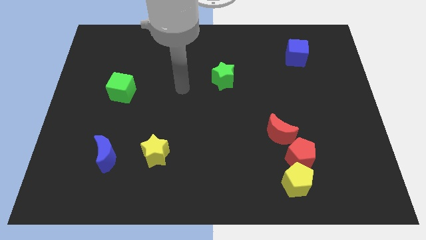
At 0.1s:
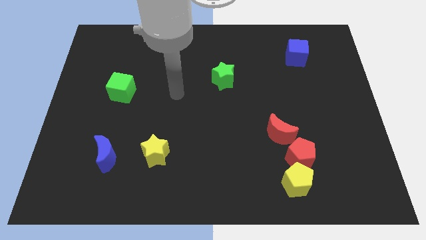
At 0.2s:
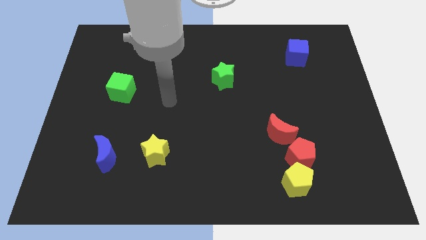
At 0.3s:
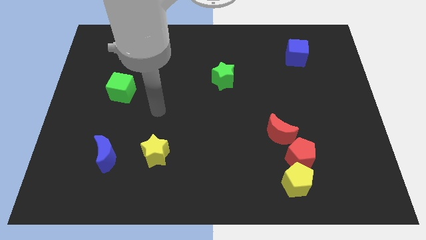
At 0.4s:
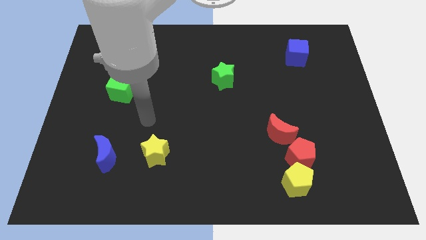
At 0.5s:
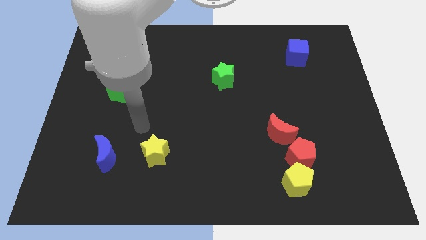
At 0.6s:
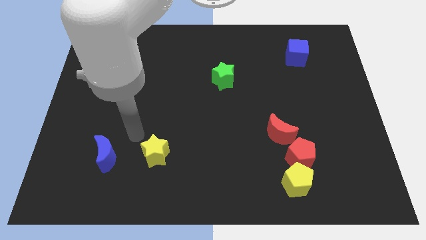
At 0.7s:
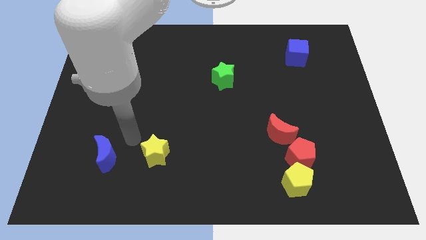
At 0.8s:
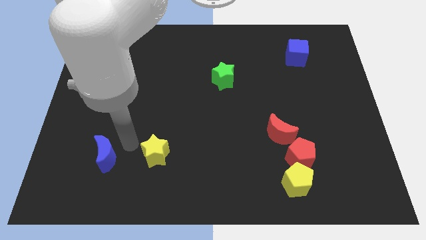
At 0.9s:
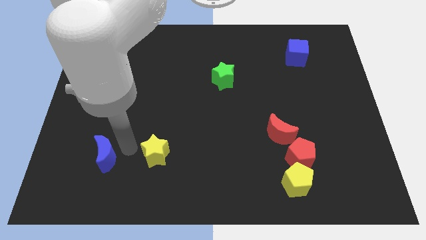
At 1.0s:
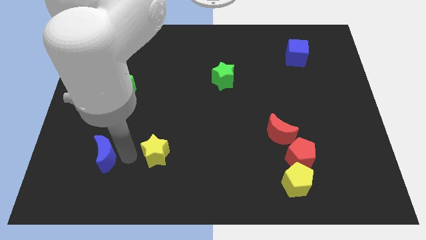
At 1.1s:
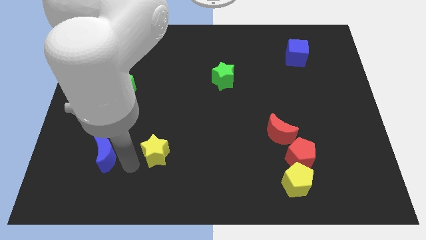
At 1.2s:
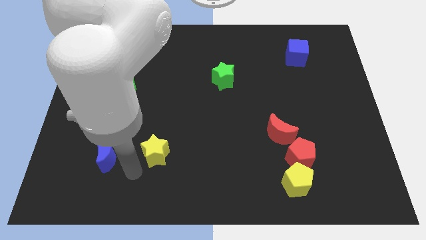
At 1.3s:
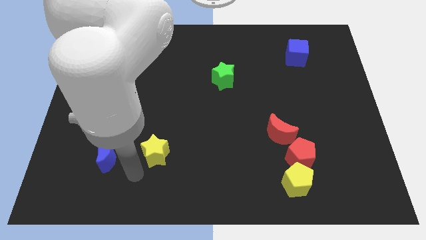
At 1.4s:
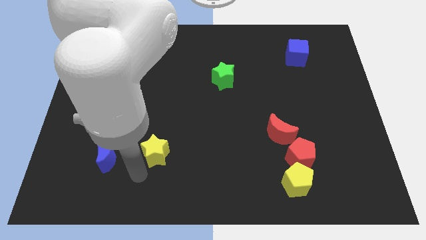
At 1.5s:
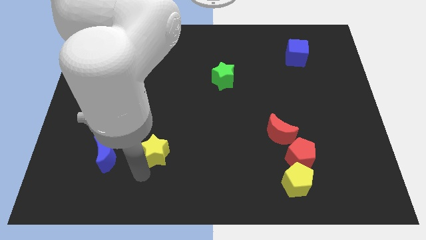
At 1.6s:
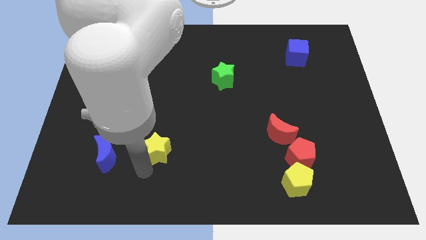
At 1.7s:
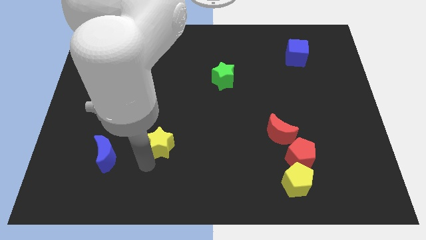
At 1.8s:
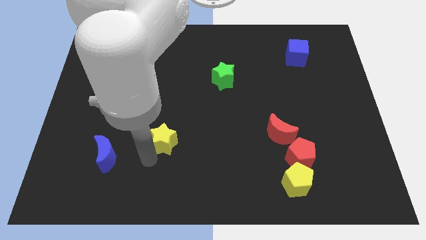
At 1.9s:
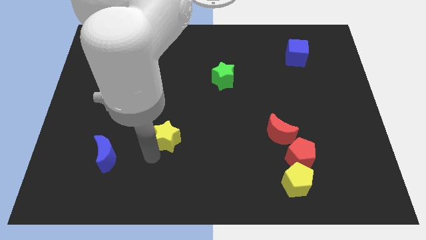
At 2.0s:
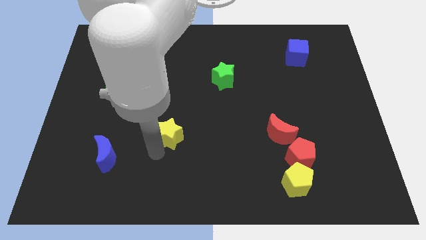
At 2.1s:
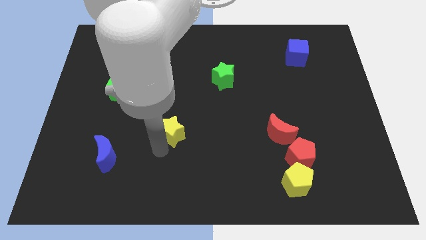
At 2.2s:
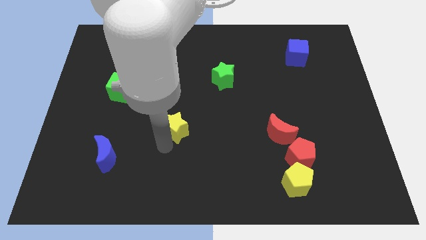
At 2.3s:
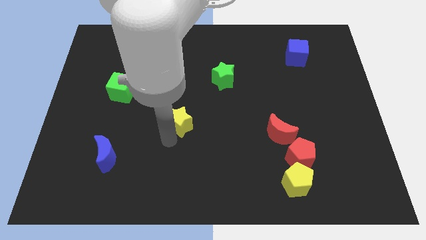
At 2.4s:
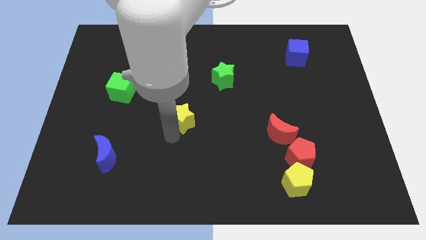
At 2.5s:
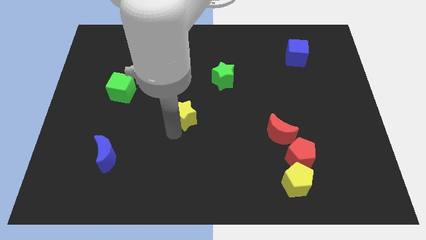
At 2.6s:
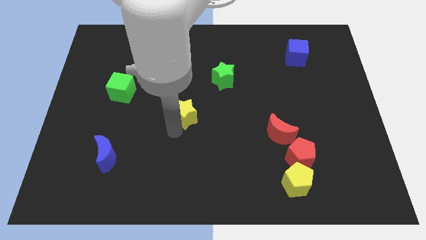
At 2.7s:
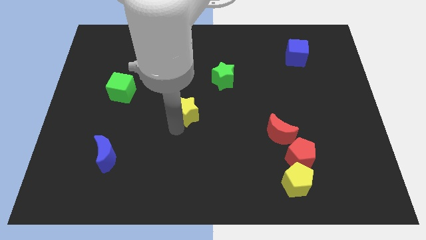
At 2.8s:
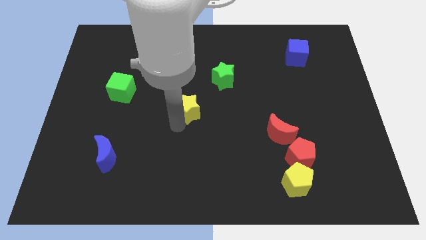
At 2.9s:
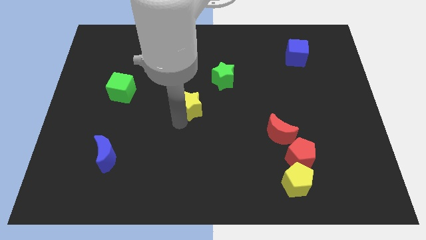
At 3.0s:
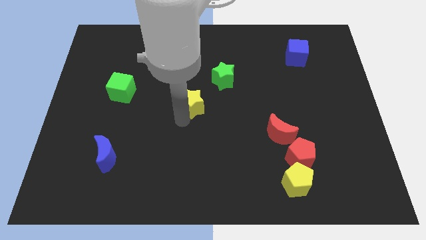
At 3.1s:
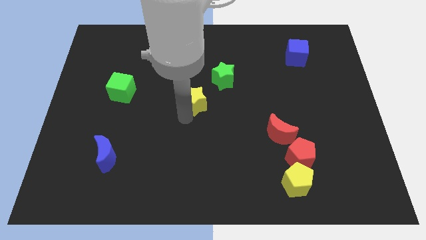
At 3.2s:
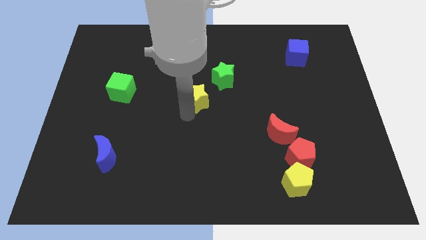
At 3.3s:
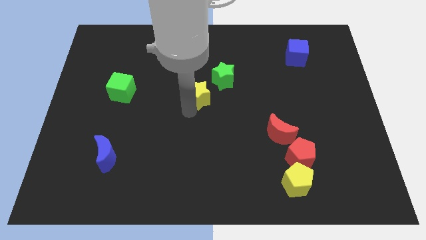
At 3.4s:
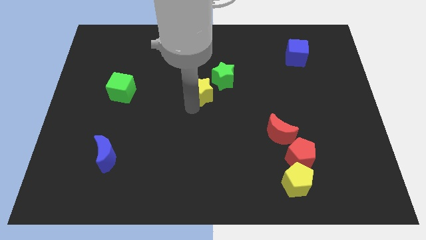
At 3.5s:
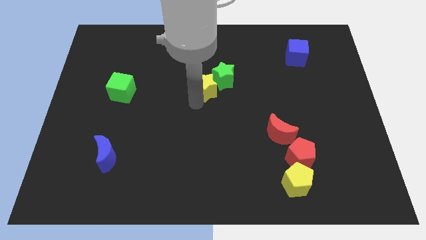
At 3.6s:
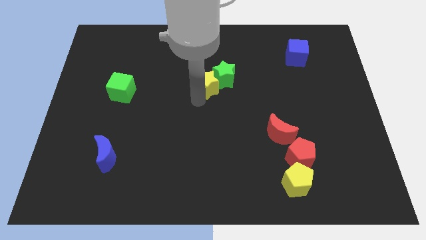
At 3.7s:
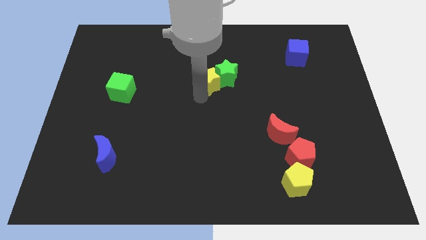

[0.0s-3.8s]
push the yellow star next to the green star

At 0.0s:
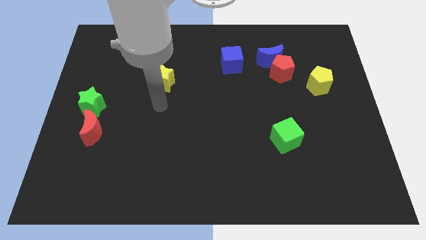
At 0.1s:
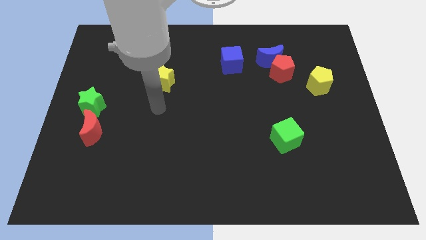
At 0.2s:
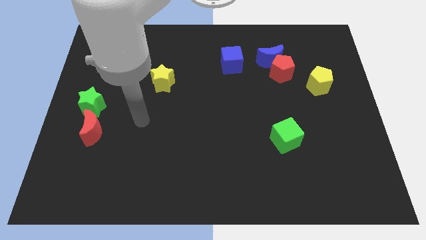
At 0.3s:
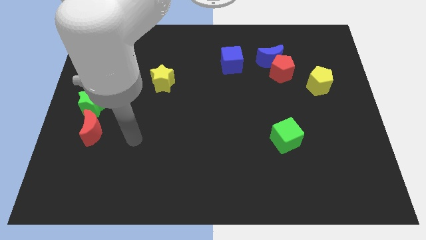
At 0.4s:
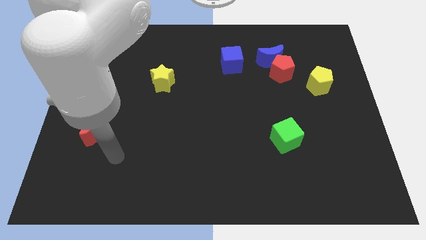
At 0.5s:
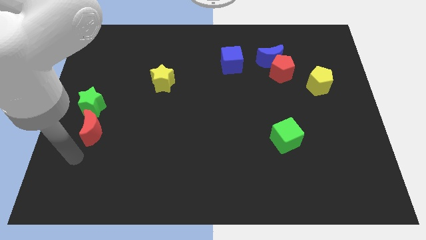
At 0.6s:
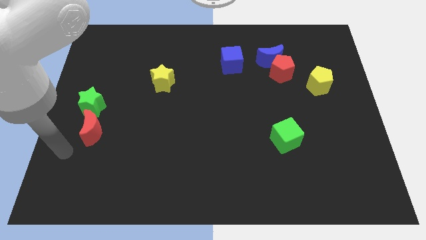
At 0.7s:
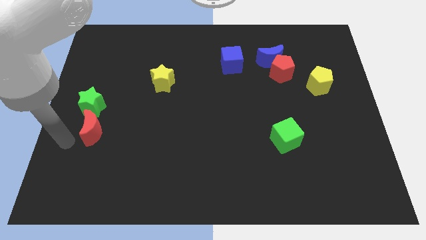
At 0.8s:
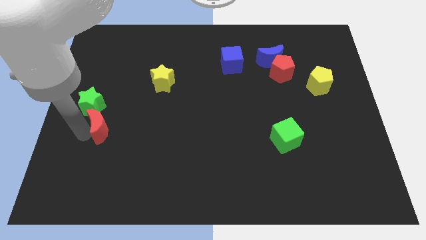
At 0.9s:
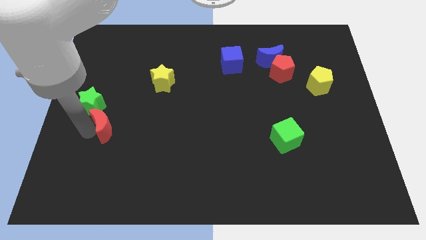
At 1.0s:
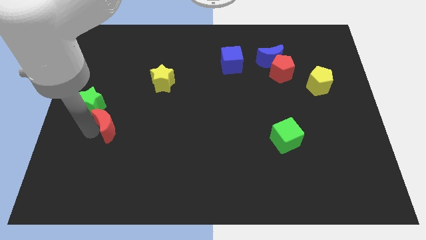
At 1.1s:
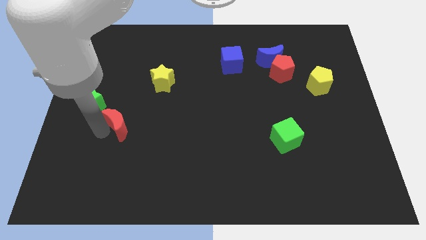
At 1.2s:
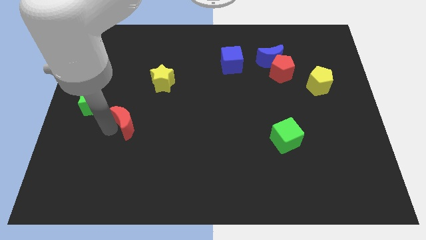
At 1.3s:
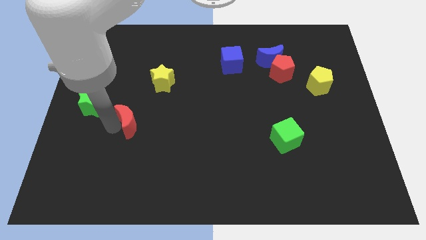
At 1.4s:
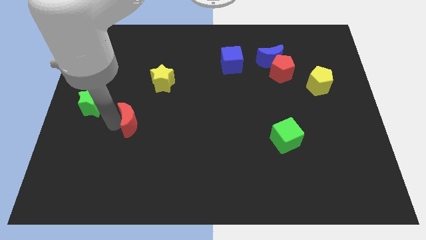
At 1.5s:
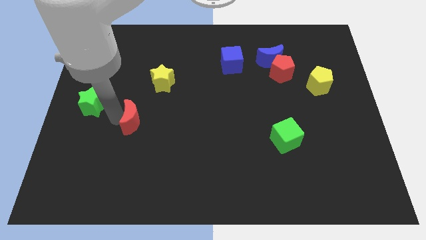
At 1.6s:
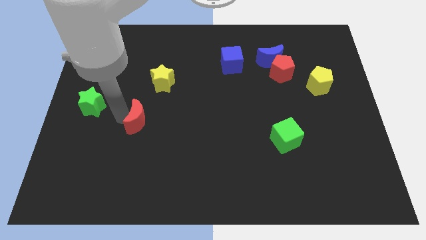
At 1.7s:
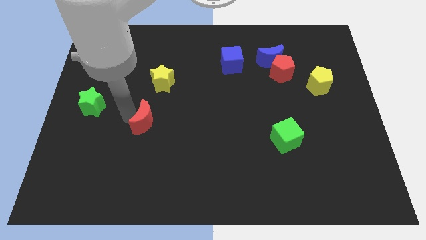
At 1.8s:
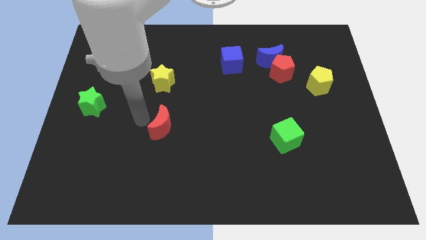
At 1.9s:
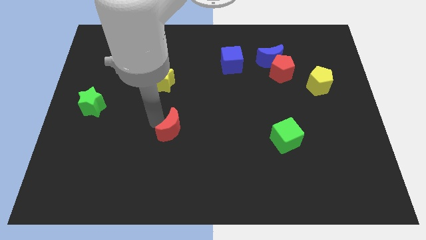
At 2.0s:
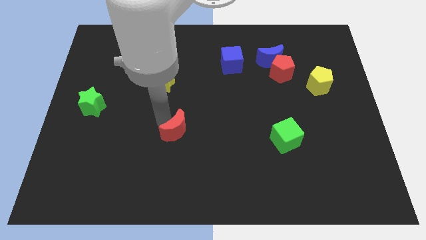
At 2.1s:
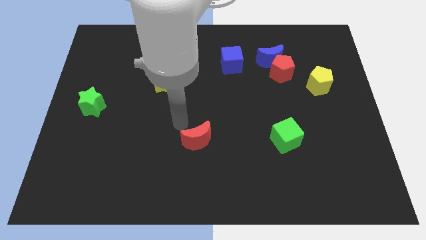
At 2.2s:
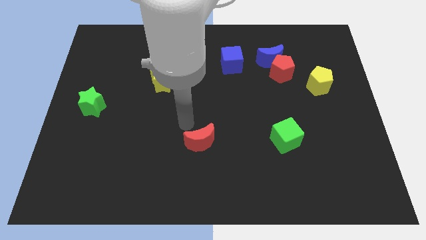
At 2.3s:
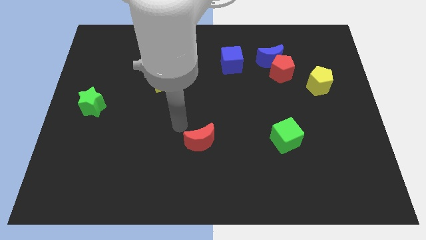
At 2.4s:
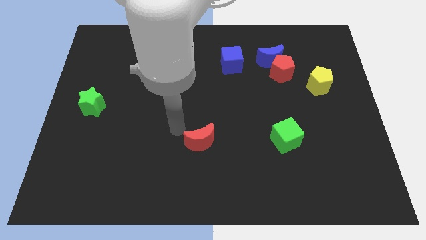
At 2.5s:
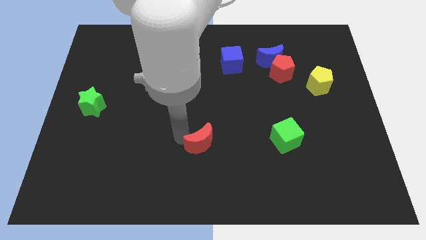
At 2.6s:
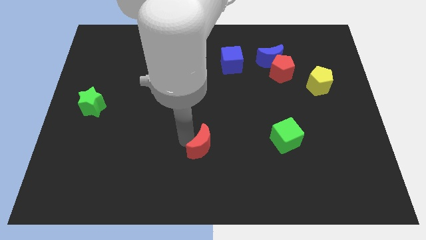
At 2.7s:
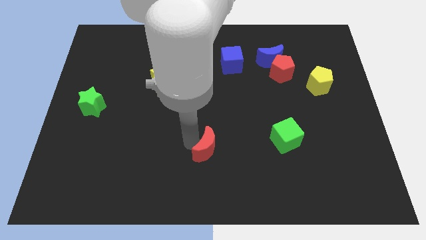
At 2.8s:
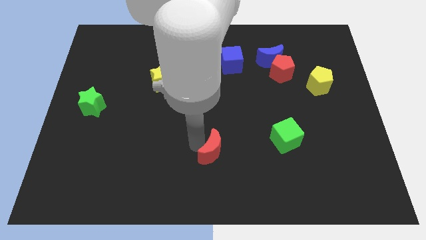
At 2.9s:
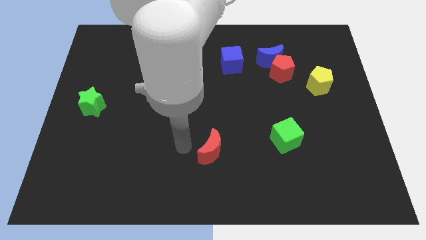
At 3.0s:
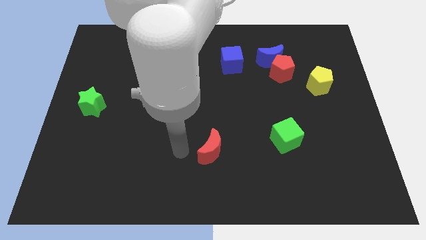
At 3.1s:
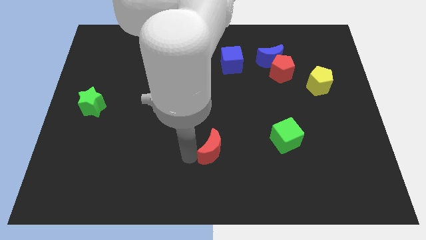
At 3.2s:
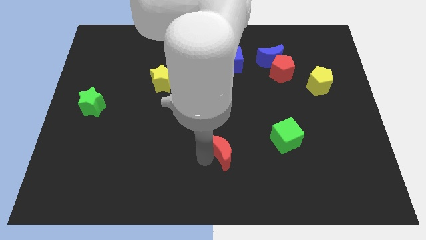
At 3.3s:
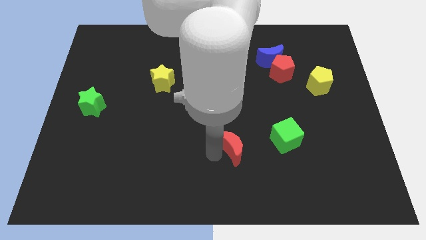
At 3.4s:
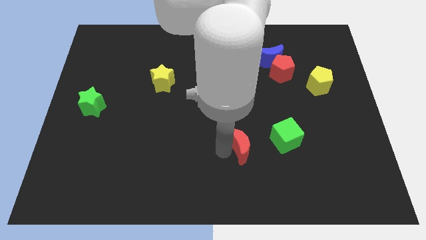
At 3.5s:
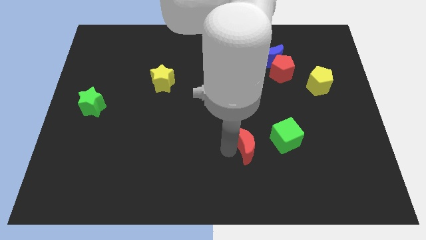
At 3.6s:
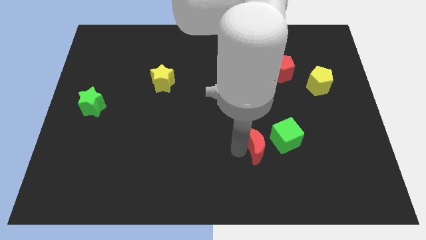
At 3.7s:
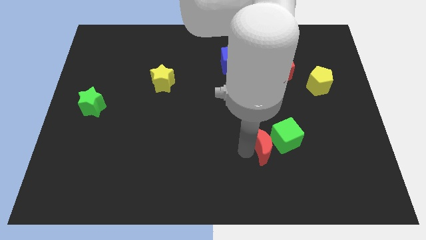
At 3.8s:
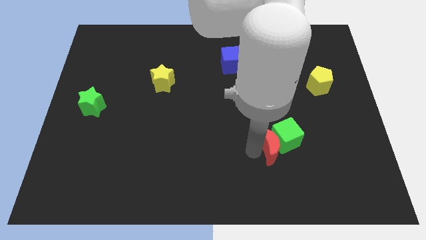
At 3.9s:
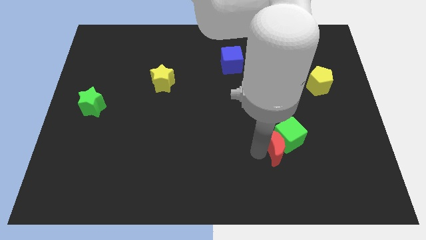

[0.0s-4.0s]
slide the red moon close to the green cube

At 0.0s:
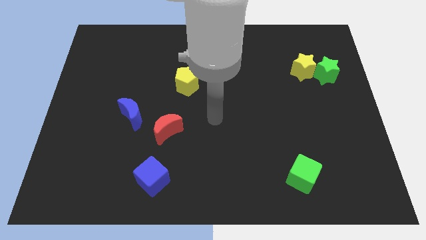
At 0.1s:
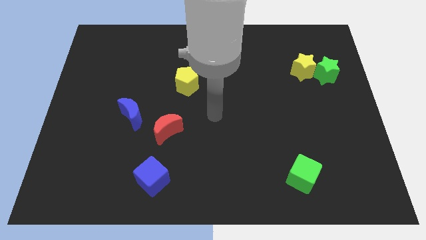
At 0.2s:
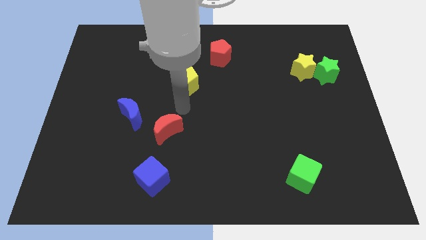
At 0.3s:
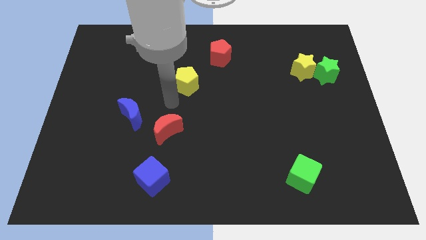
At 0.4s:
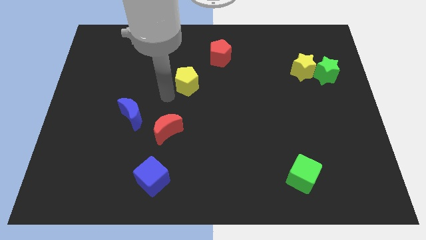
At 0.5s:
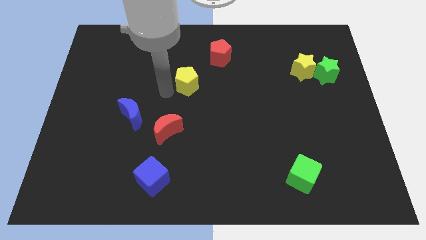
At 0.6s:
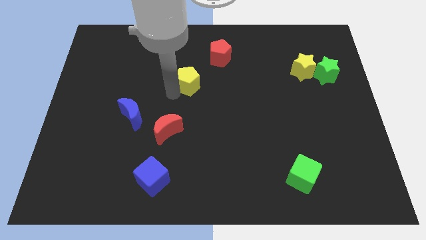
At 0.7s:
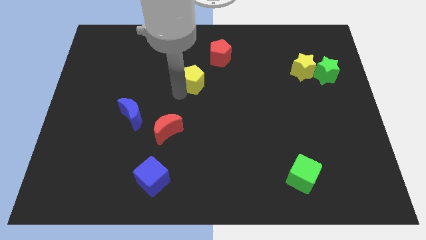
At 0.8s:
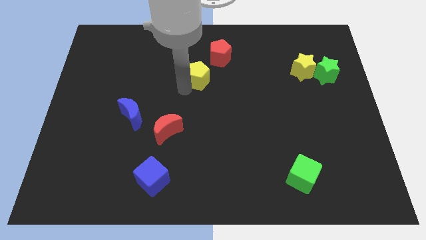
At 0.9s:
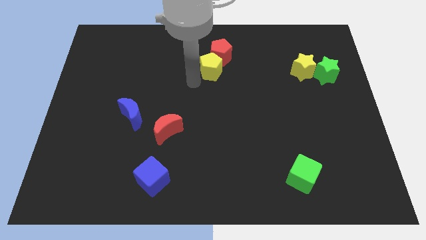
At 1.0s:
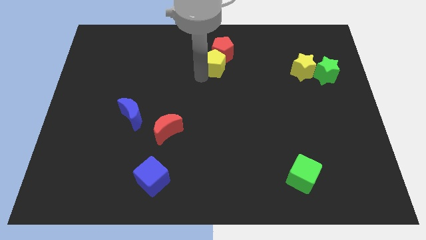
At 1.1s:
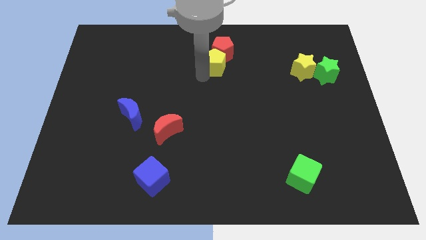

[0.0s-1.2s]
push the yellow pentagon to the red pentagon
